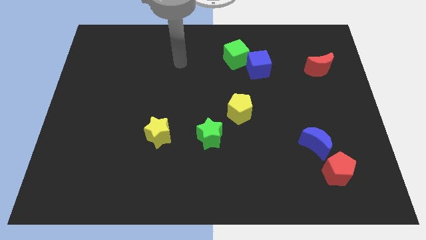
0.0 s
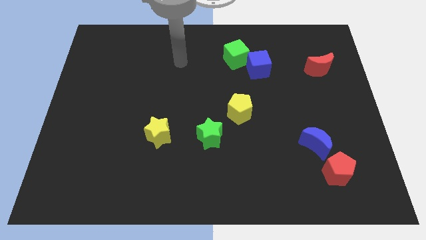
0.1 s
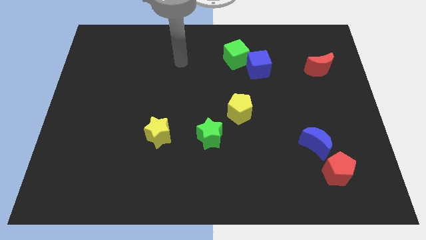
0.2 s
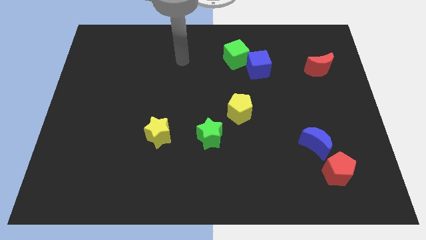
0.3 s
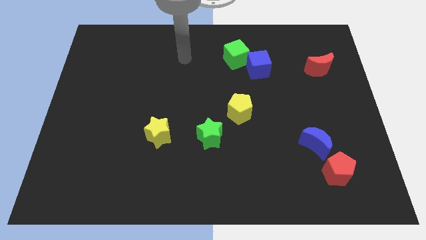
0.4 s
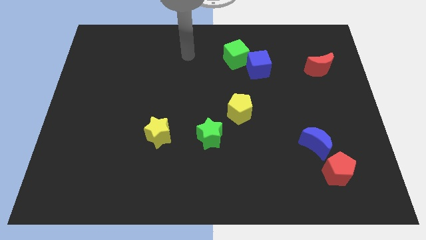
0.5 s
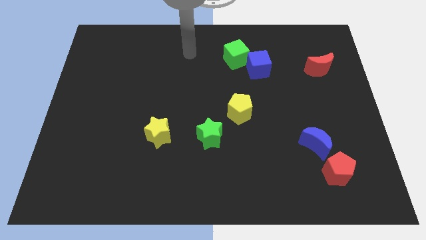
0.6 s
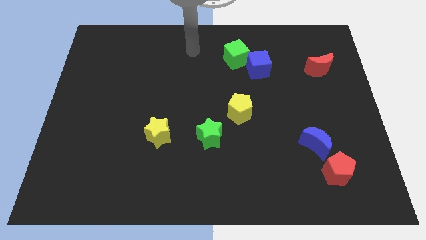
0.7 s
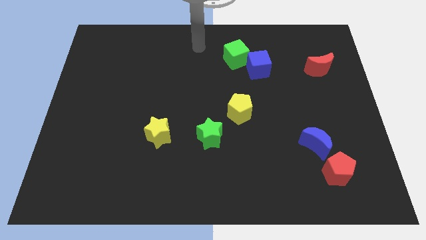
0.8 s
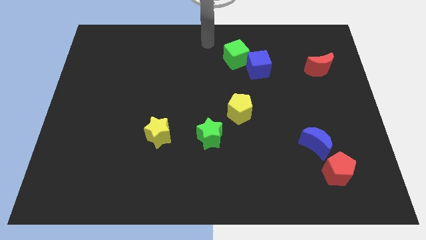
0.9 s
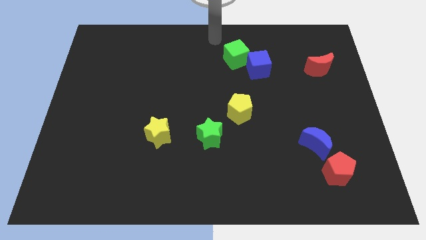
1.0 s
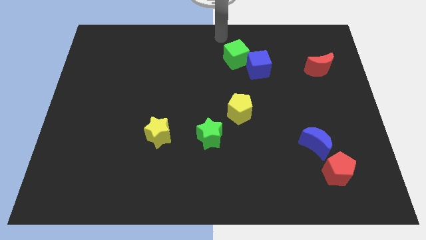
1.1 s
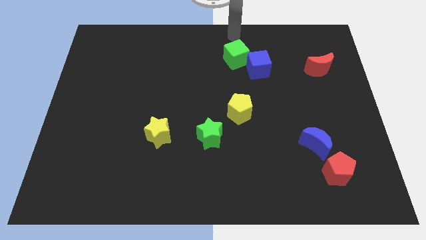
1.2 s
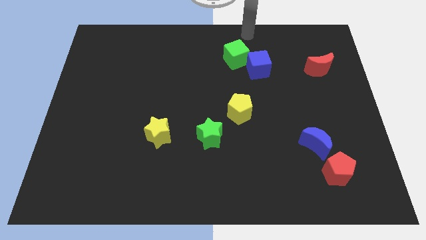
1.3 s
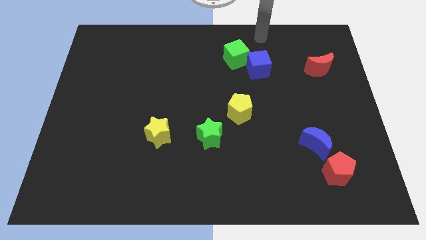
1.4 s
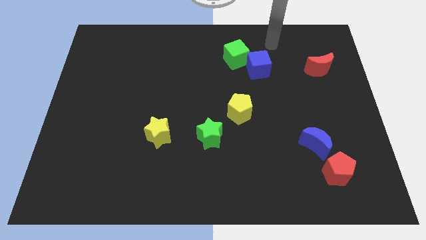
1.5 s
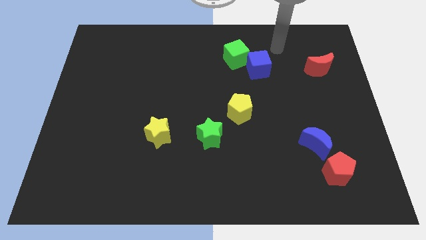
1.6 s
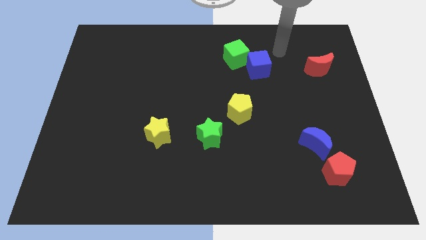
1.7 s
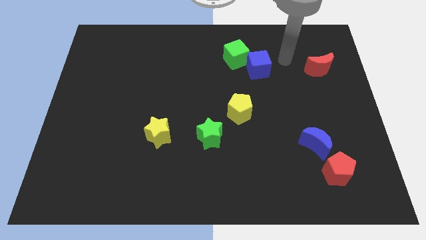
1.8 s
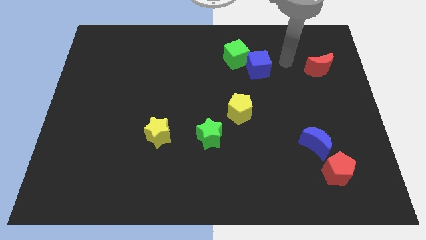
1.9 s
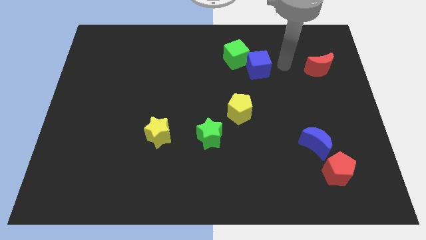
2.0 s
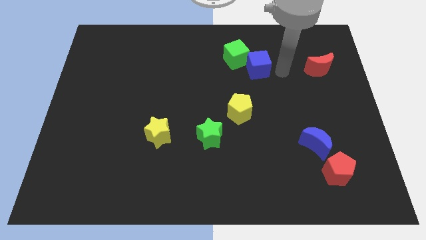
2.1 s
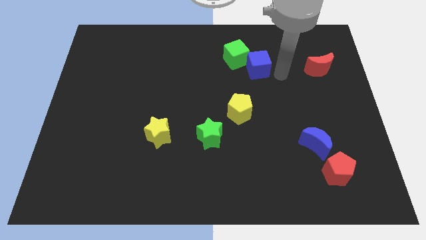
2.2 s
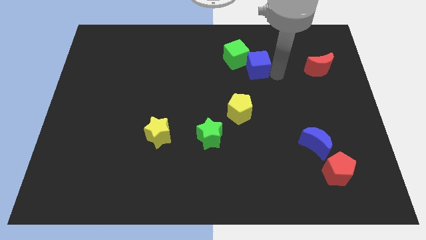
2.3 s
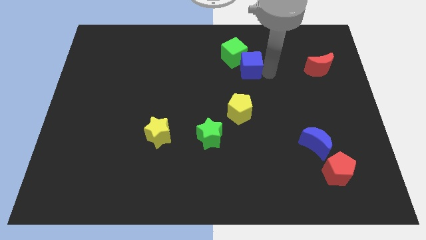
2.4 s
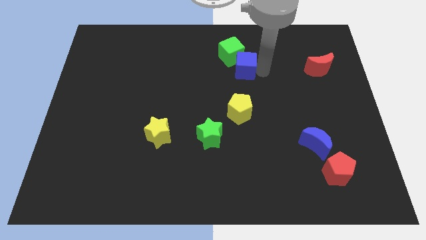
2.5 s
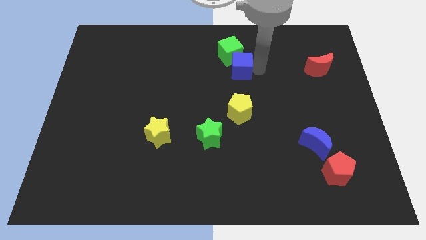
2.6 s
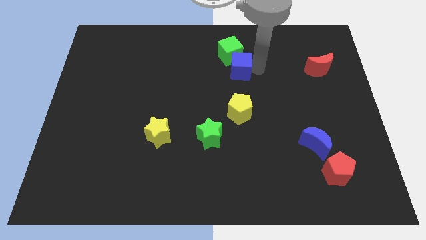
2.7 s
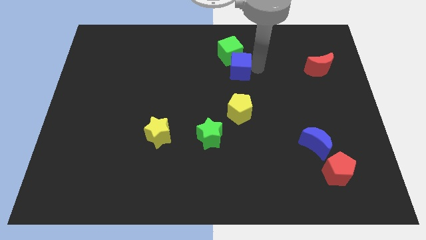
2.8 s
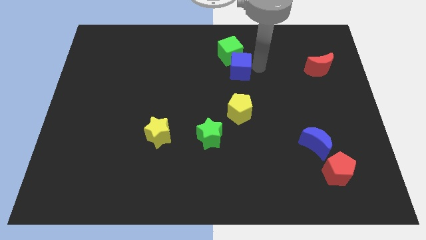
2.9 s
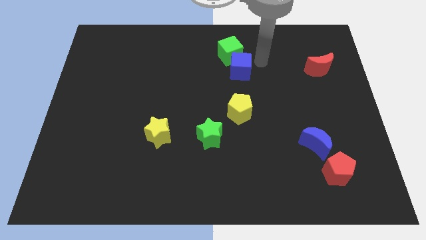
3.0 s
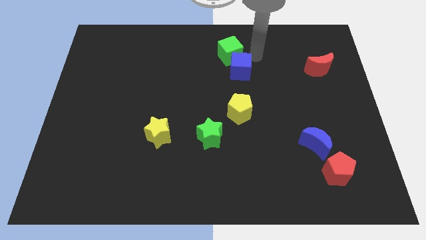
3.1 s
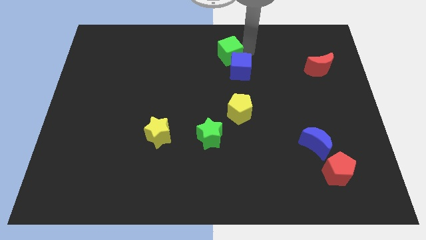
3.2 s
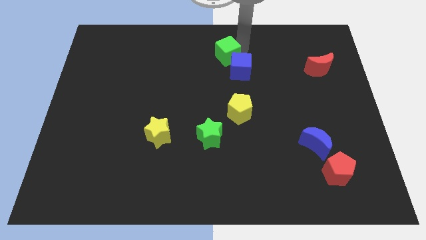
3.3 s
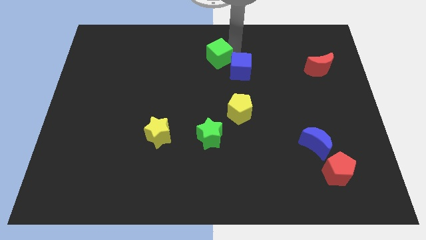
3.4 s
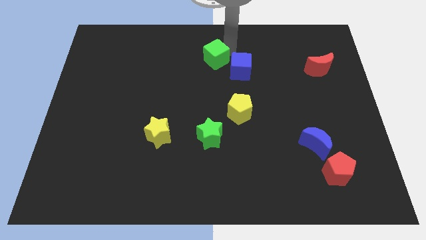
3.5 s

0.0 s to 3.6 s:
push the blue cube into the green cube

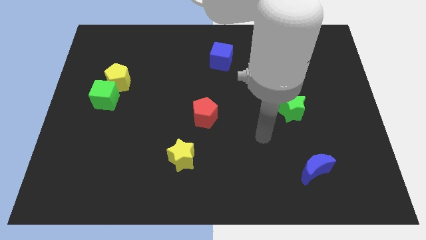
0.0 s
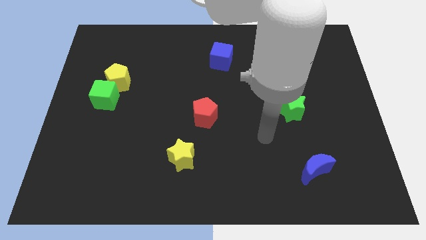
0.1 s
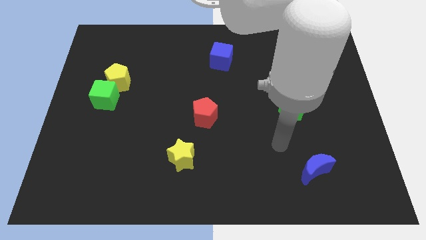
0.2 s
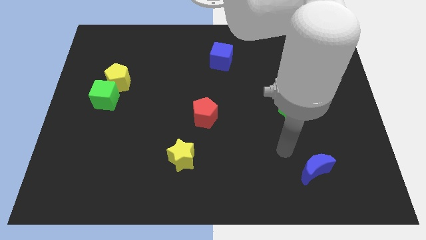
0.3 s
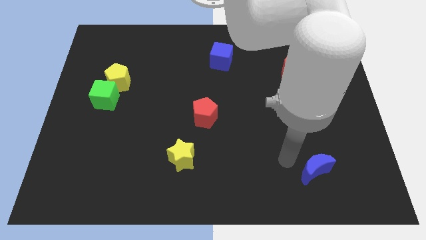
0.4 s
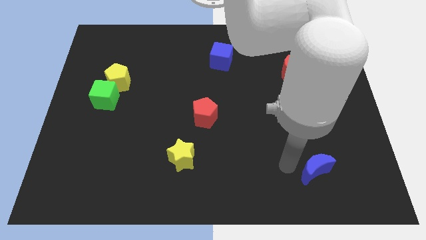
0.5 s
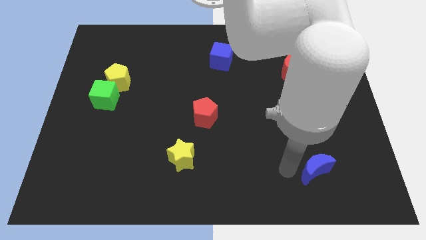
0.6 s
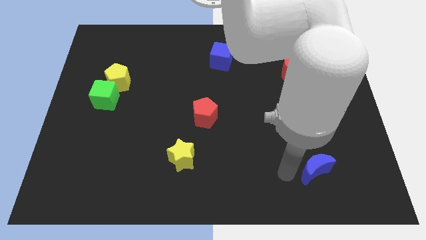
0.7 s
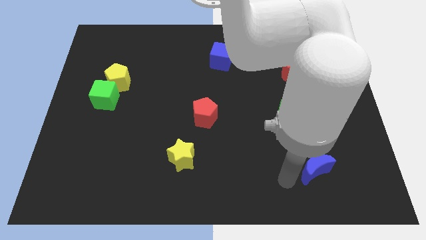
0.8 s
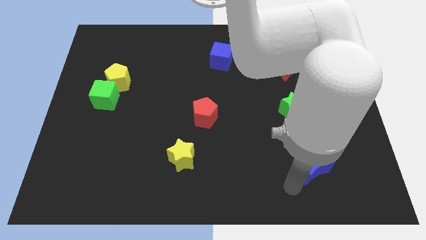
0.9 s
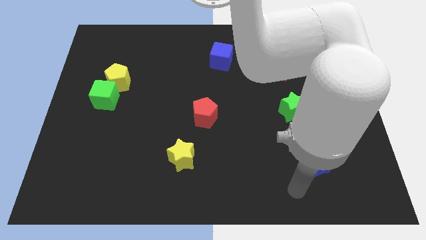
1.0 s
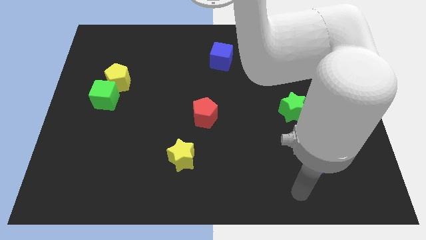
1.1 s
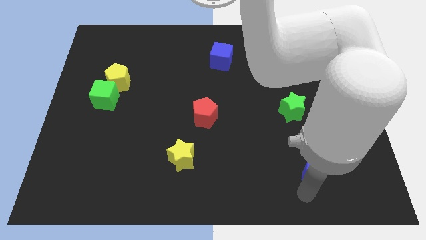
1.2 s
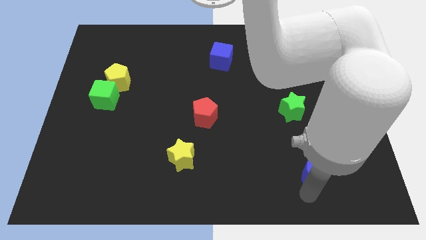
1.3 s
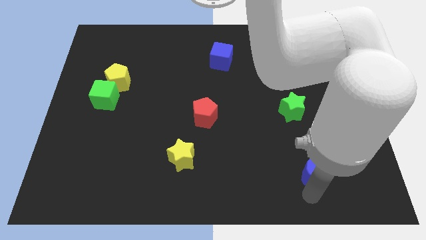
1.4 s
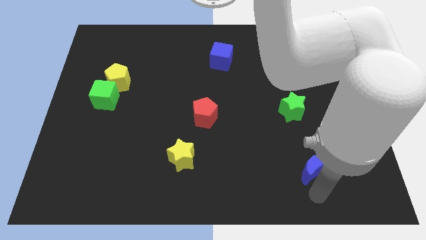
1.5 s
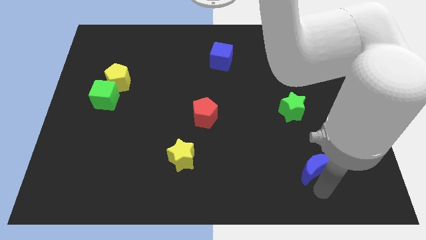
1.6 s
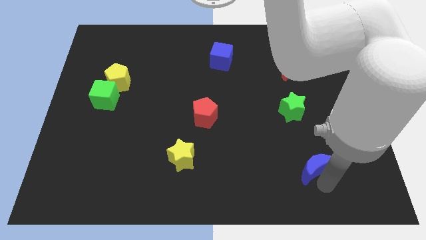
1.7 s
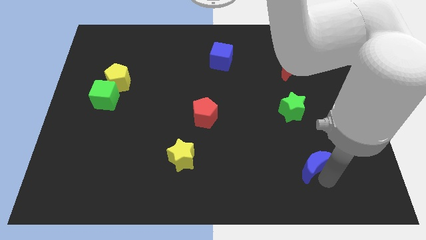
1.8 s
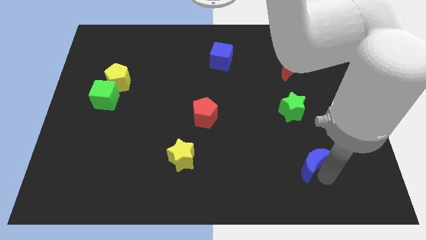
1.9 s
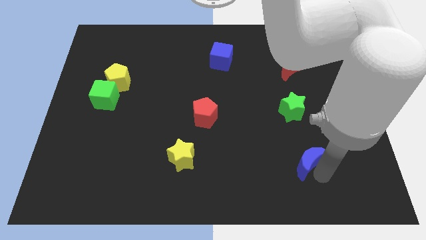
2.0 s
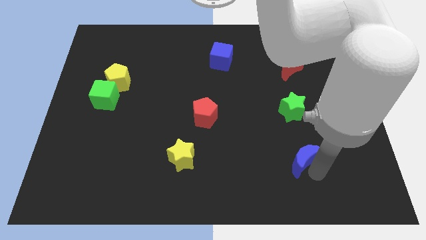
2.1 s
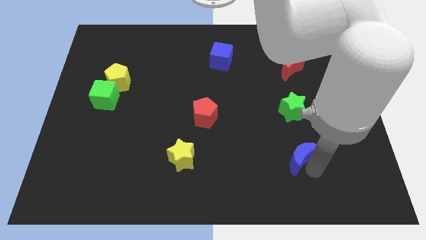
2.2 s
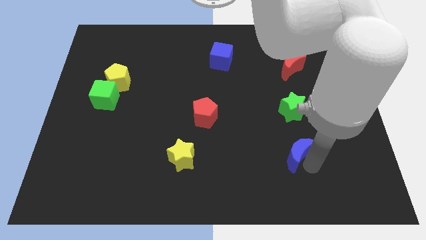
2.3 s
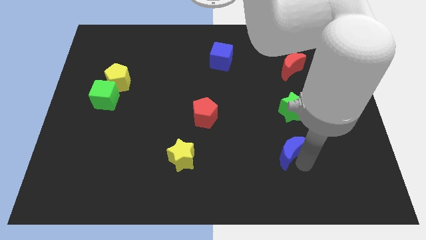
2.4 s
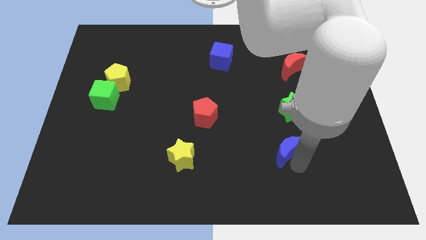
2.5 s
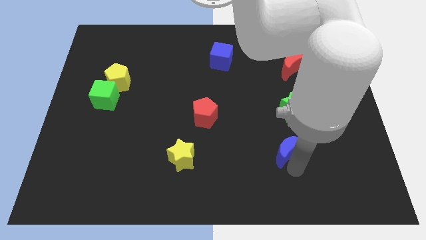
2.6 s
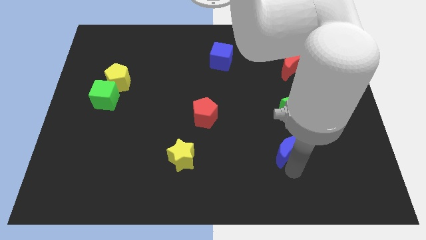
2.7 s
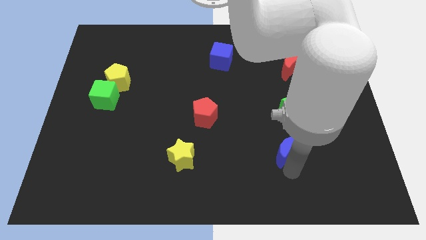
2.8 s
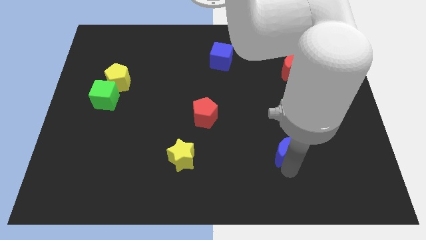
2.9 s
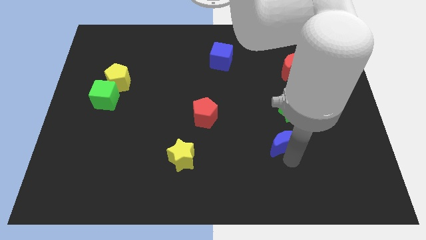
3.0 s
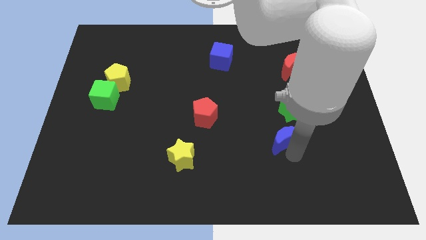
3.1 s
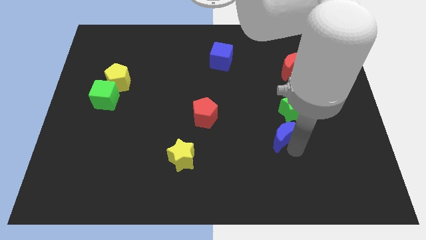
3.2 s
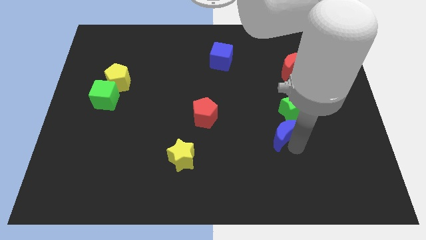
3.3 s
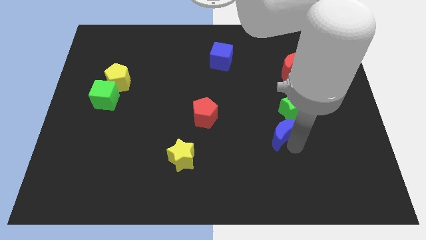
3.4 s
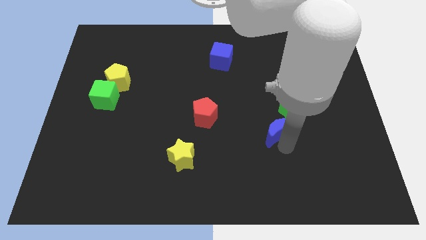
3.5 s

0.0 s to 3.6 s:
move blue crescent to the bottom of green star

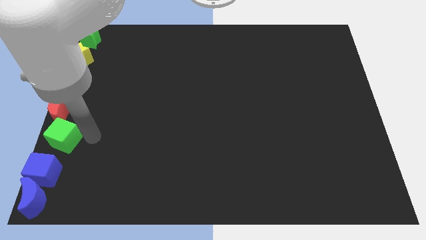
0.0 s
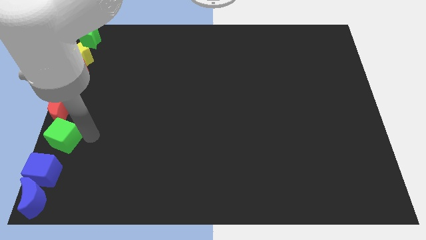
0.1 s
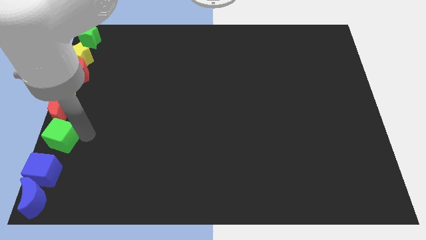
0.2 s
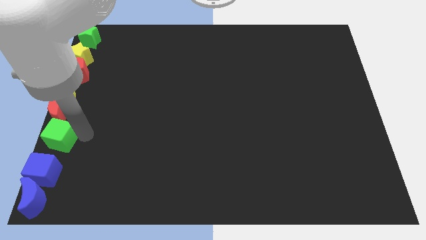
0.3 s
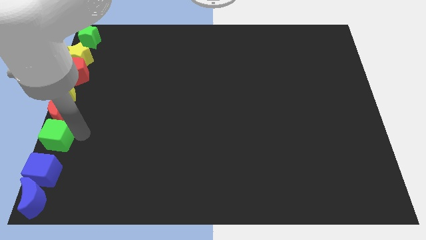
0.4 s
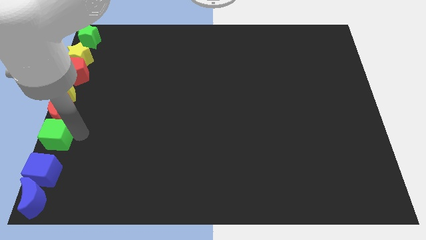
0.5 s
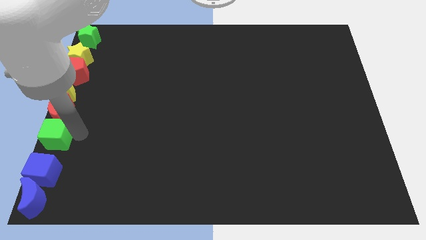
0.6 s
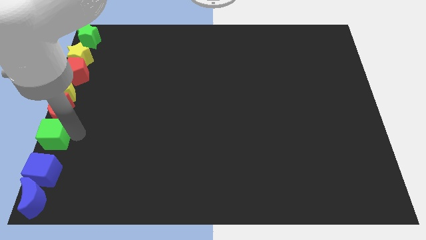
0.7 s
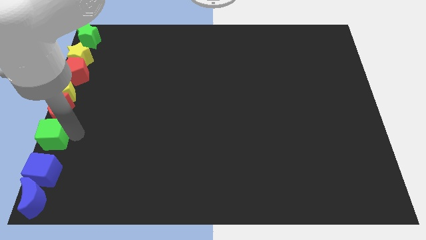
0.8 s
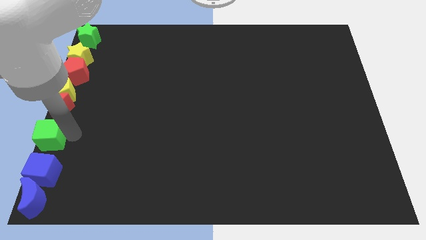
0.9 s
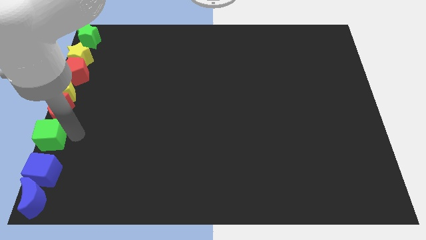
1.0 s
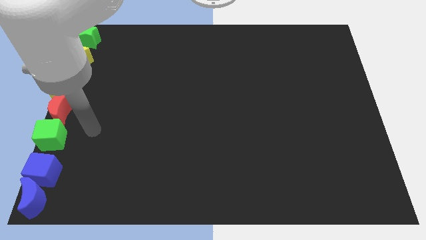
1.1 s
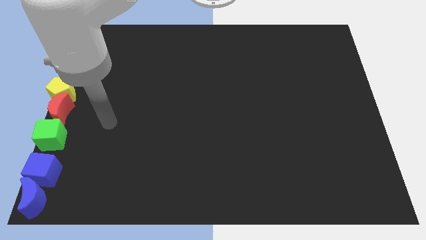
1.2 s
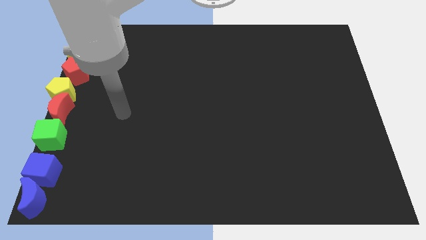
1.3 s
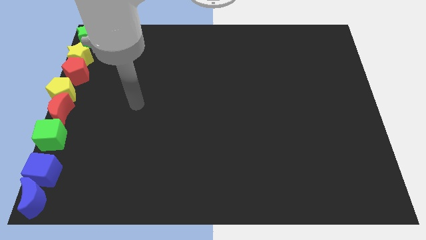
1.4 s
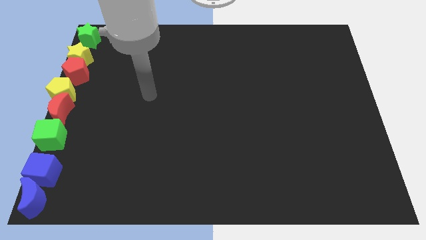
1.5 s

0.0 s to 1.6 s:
push the green cube above the blue cube

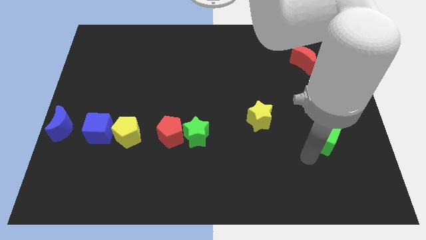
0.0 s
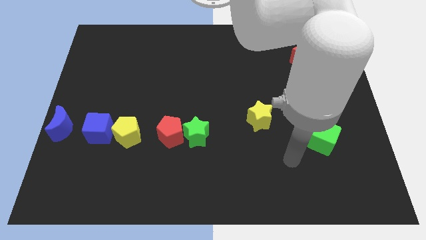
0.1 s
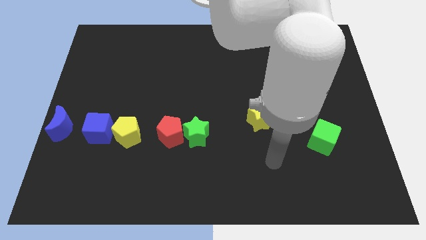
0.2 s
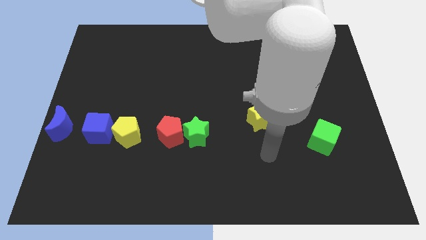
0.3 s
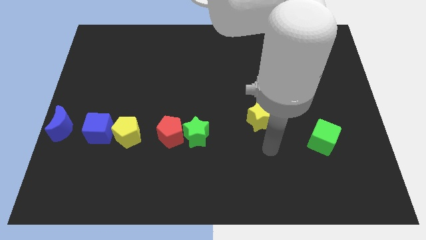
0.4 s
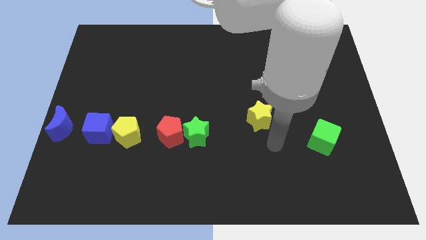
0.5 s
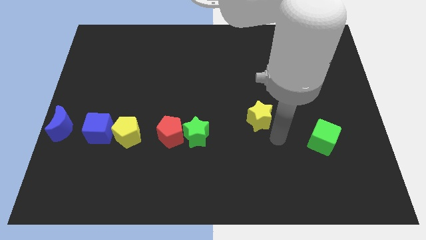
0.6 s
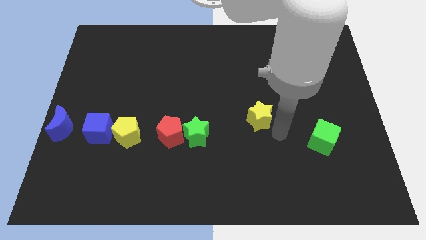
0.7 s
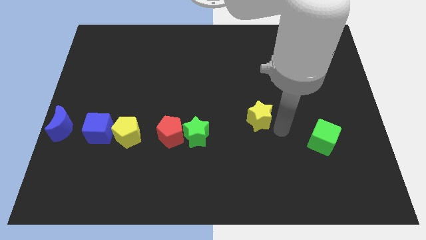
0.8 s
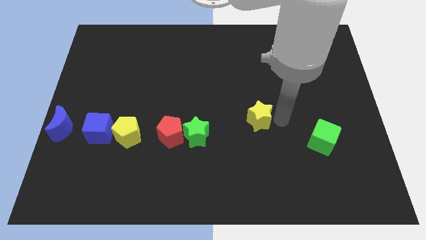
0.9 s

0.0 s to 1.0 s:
place your arm to the right side of the yellow star
